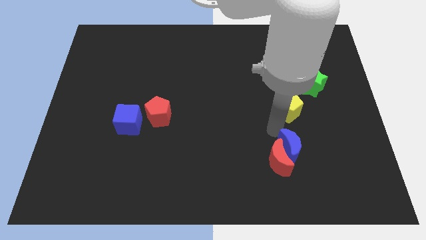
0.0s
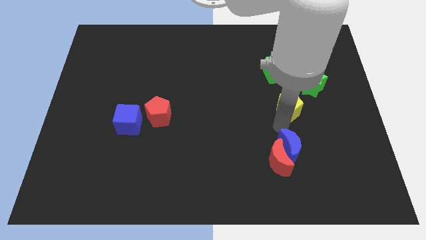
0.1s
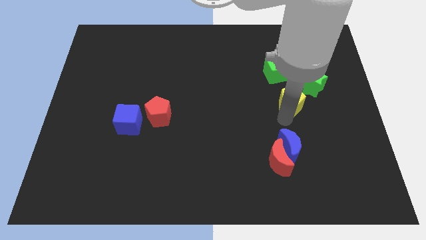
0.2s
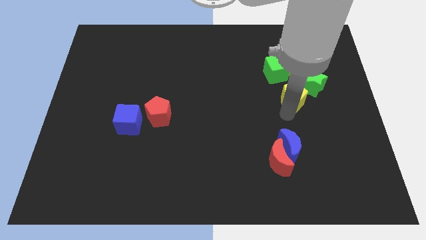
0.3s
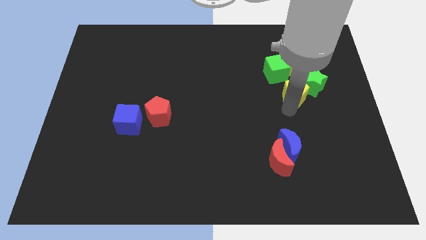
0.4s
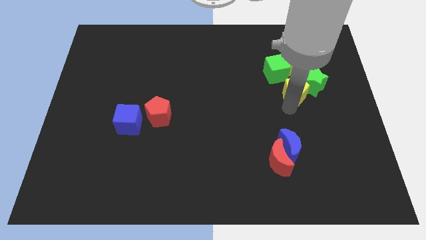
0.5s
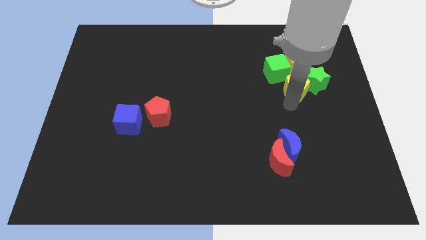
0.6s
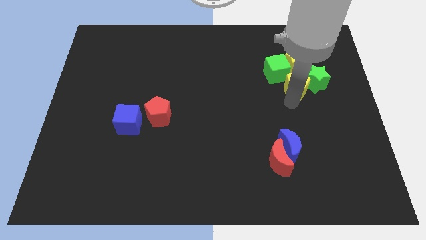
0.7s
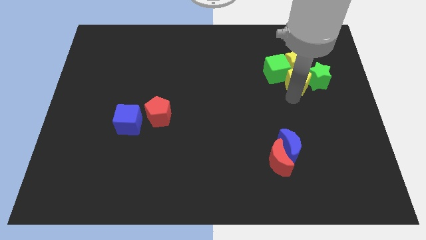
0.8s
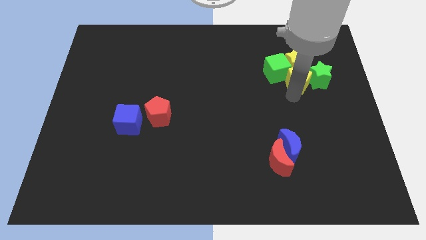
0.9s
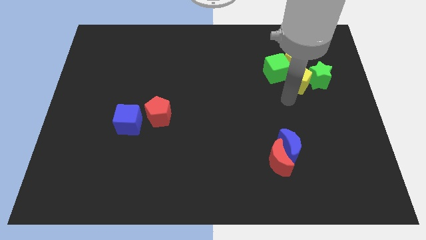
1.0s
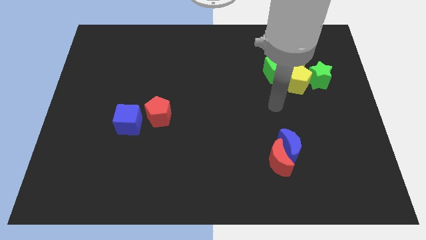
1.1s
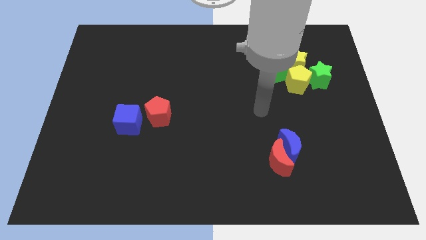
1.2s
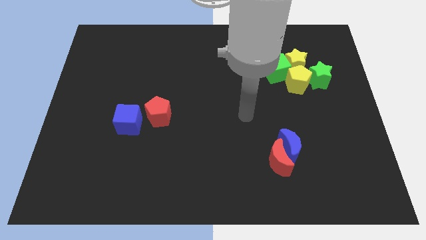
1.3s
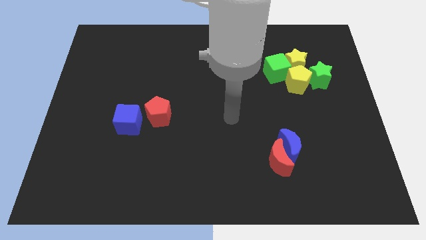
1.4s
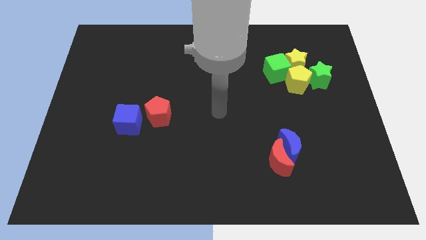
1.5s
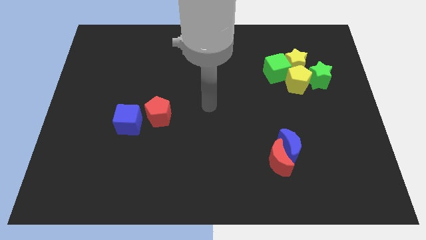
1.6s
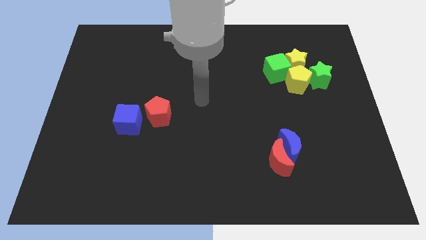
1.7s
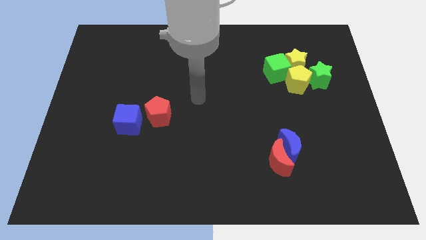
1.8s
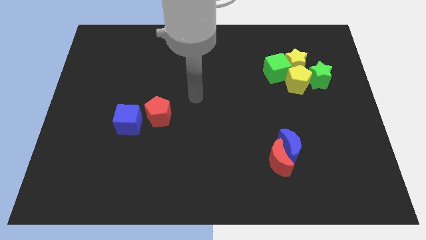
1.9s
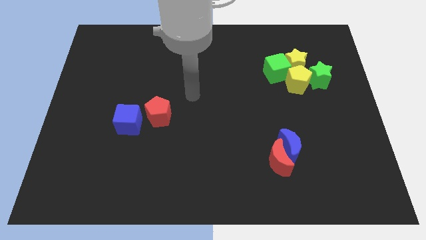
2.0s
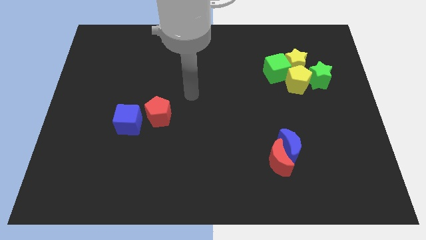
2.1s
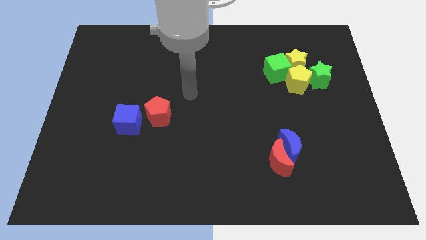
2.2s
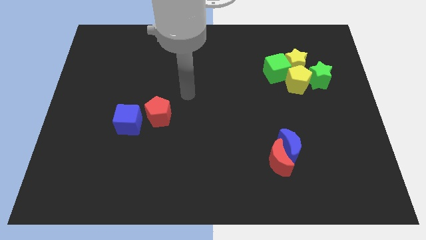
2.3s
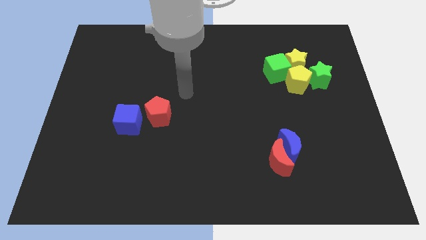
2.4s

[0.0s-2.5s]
move the yellow pentagon below into the yellow star

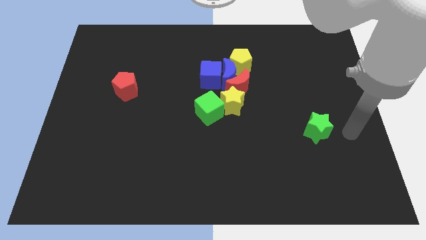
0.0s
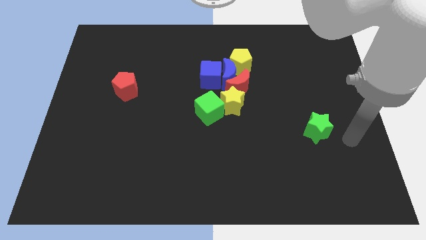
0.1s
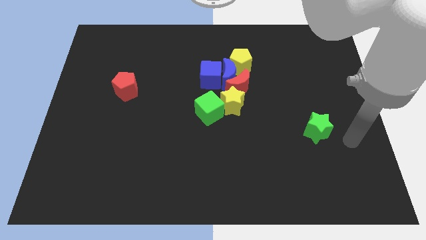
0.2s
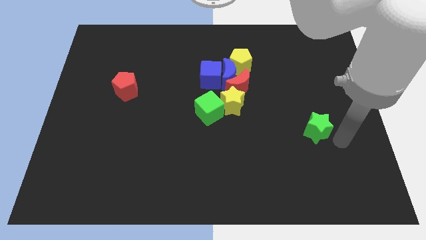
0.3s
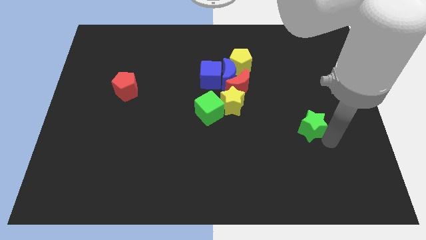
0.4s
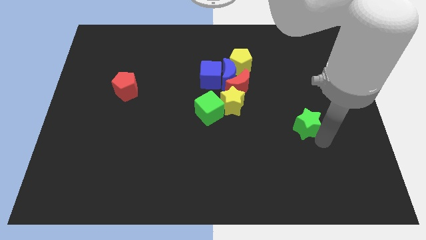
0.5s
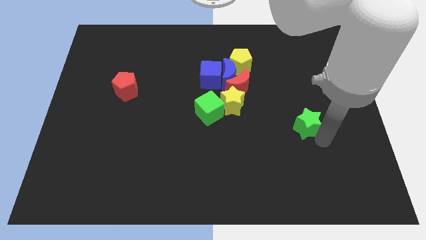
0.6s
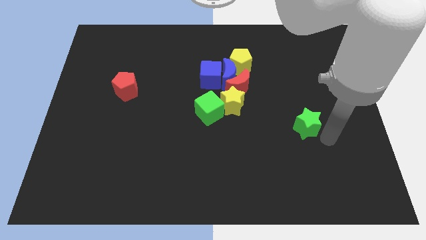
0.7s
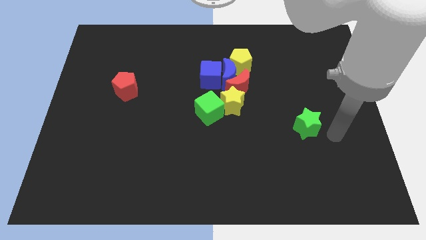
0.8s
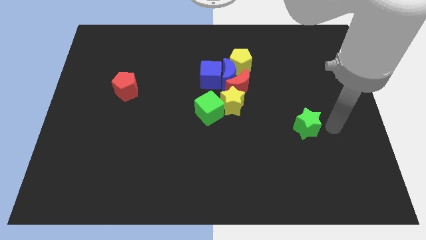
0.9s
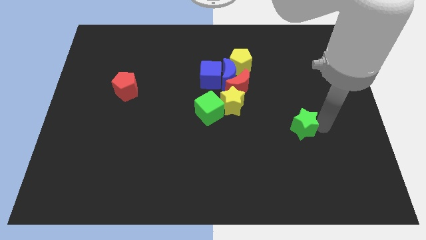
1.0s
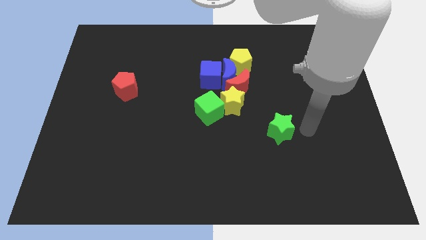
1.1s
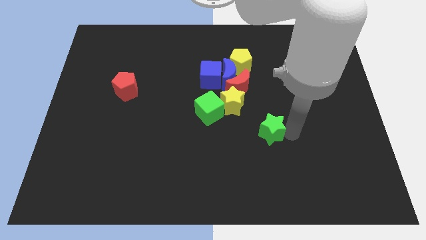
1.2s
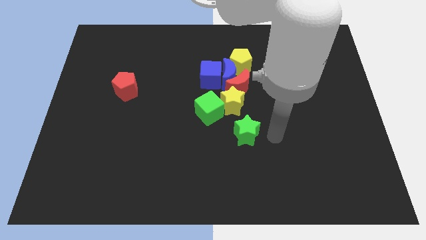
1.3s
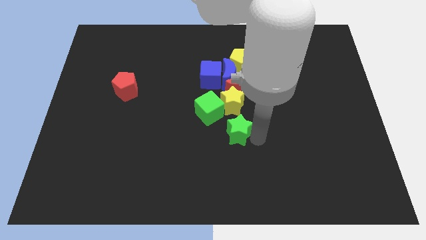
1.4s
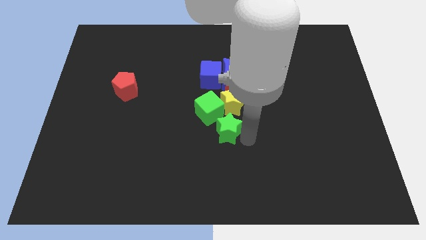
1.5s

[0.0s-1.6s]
place green star below yellow star

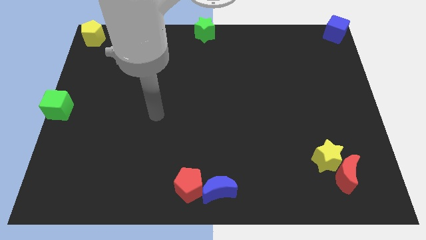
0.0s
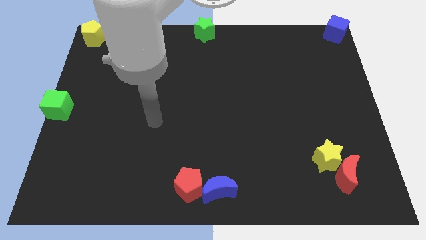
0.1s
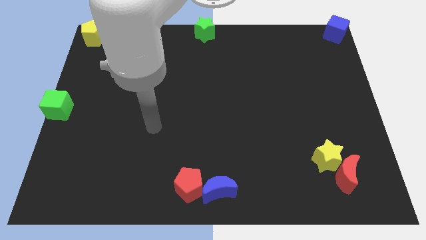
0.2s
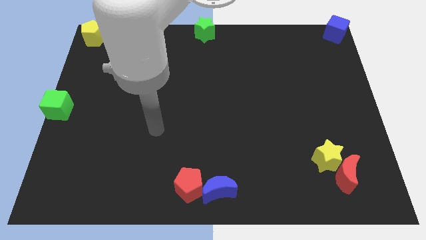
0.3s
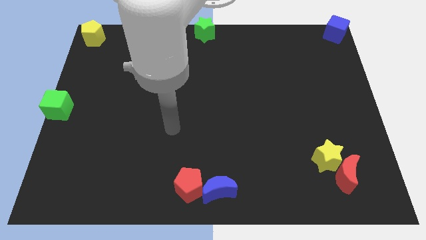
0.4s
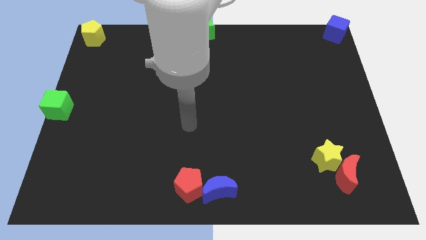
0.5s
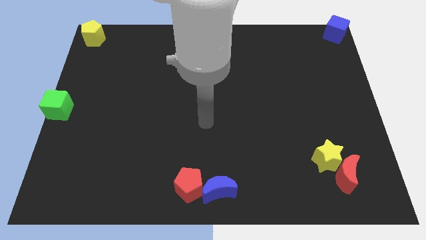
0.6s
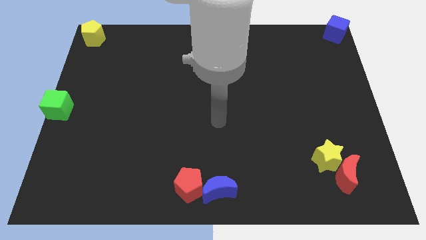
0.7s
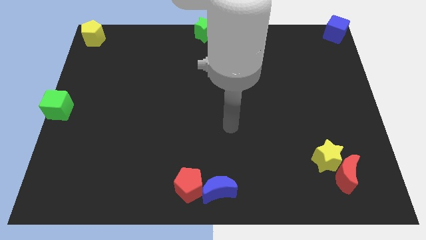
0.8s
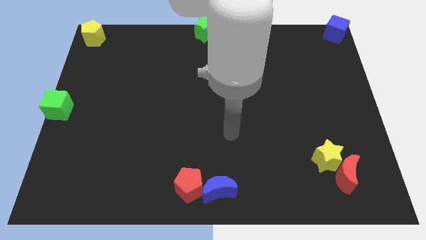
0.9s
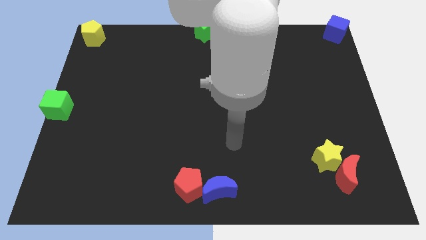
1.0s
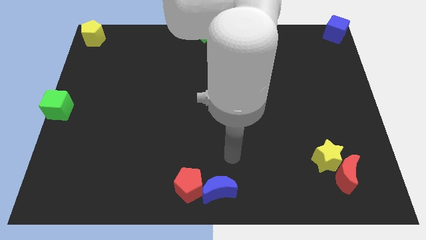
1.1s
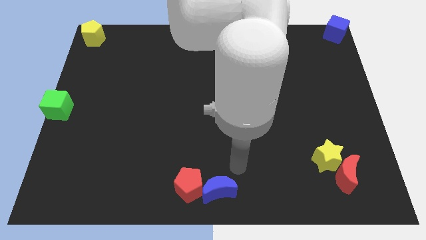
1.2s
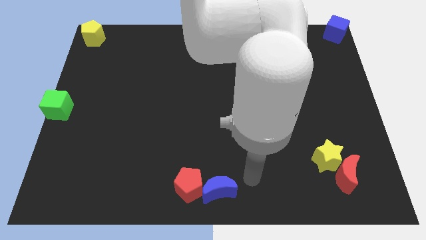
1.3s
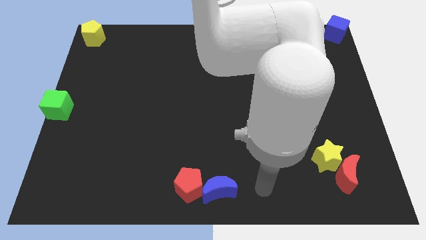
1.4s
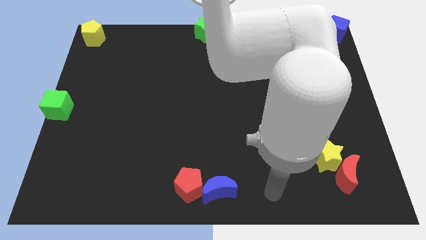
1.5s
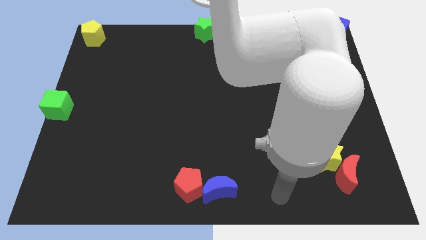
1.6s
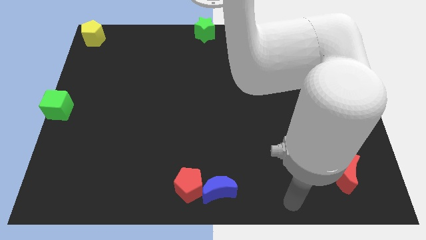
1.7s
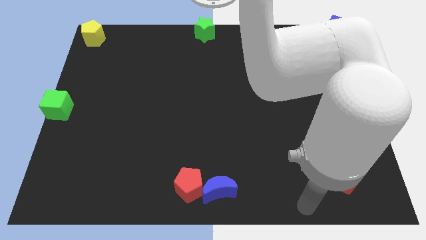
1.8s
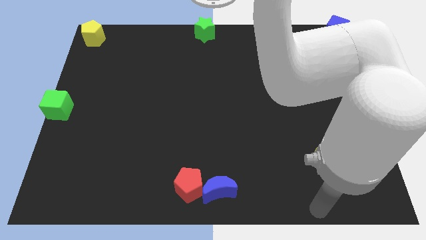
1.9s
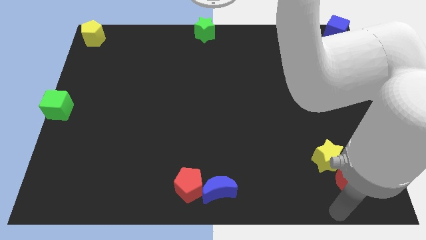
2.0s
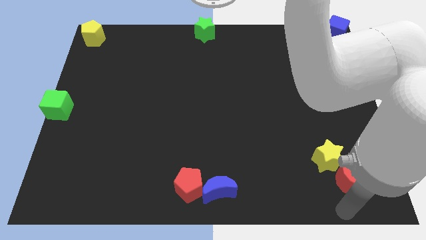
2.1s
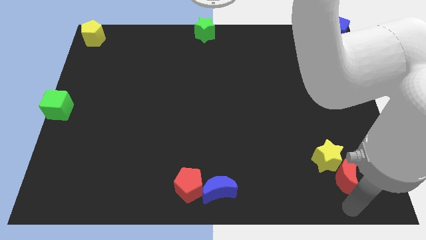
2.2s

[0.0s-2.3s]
move your arm towards the bottom right side of the board

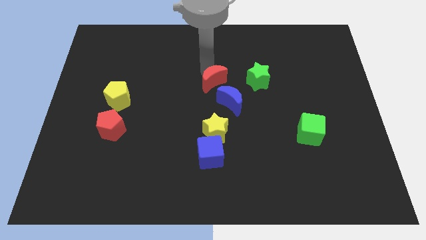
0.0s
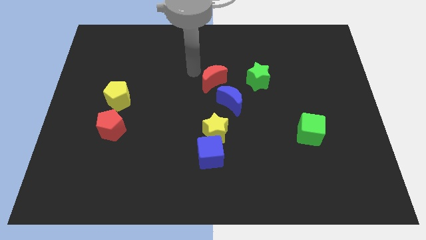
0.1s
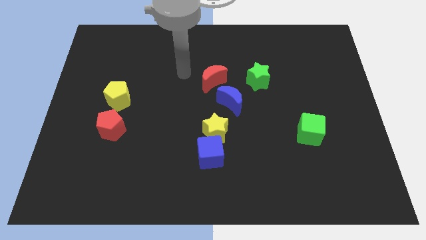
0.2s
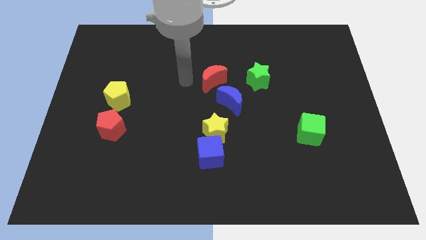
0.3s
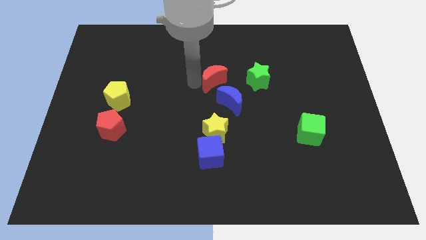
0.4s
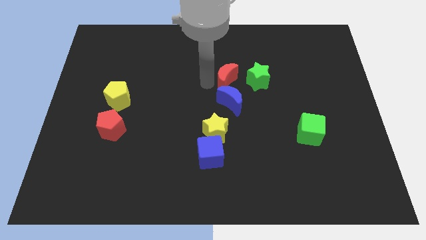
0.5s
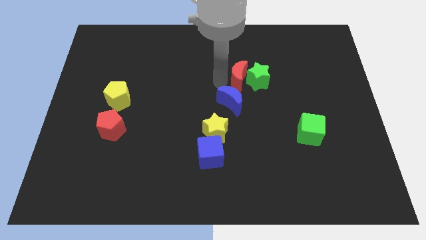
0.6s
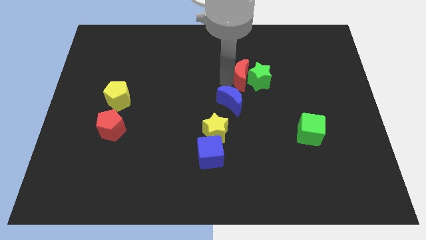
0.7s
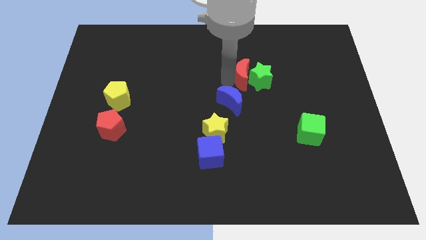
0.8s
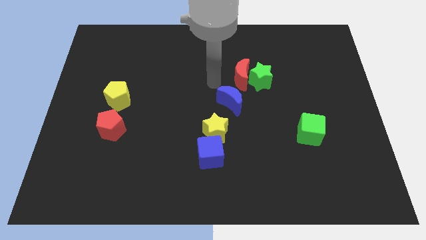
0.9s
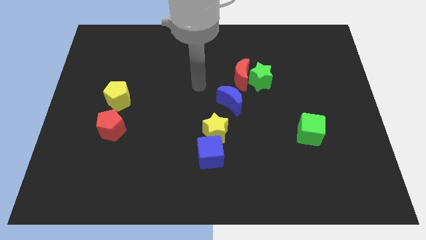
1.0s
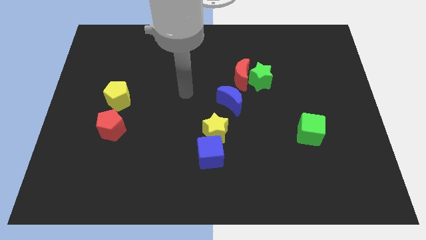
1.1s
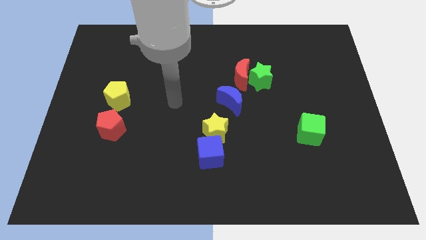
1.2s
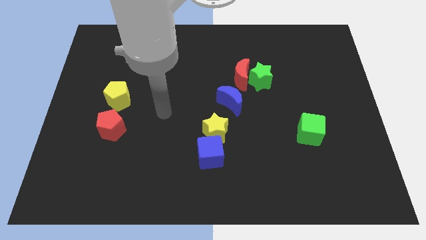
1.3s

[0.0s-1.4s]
put the red moon into the green star

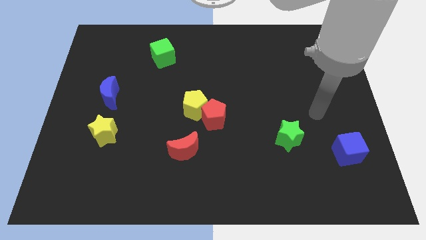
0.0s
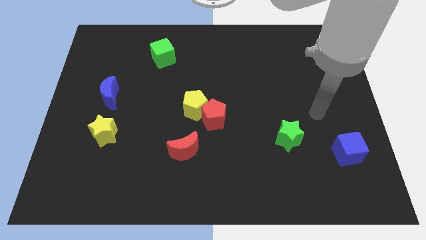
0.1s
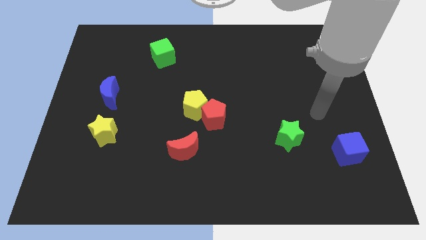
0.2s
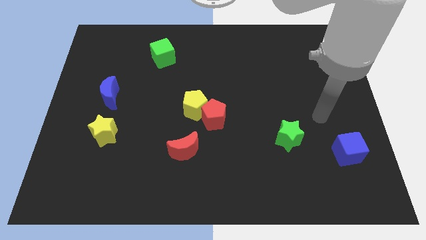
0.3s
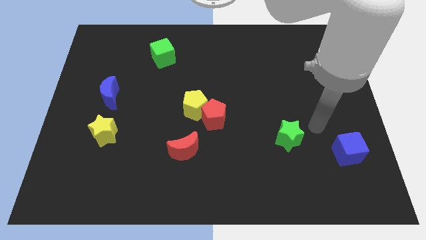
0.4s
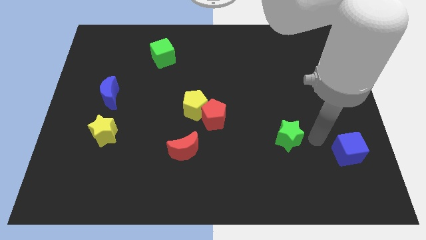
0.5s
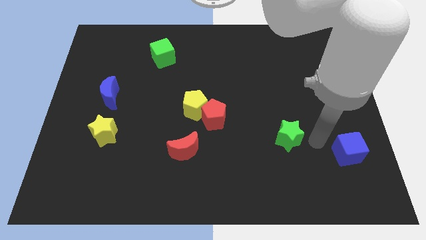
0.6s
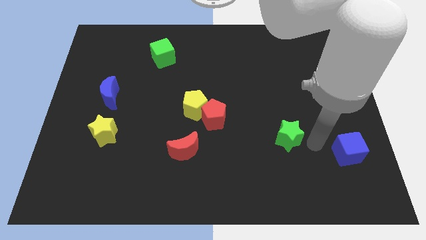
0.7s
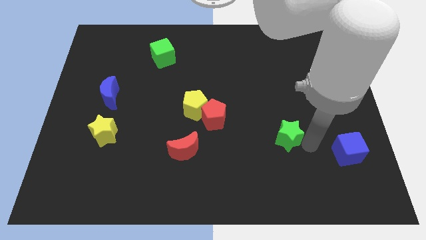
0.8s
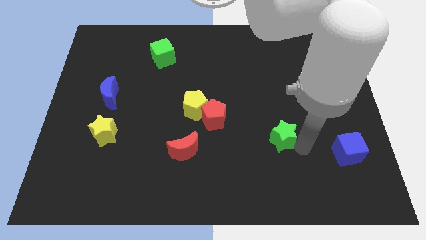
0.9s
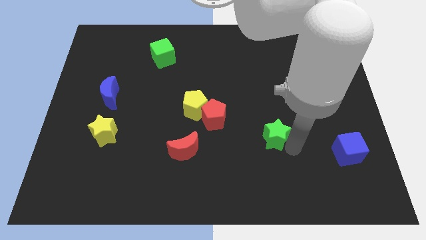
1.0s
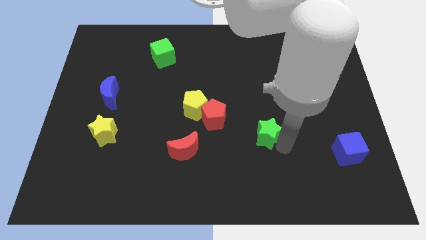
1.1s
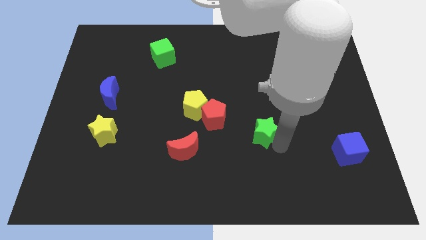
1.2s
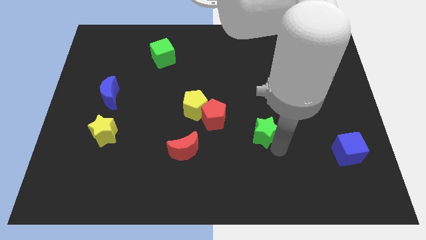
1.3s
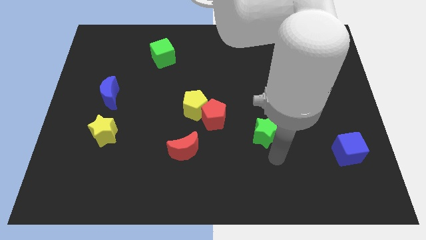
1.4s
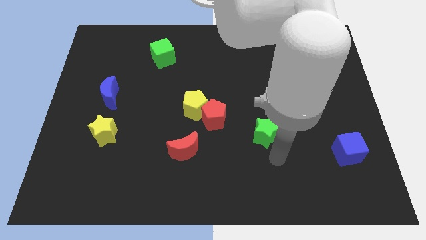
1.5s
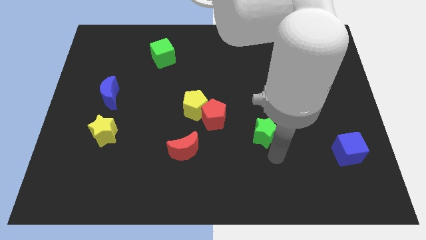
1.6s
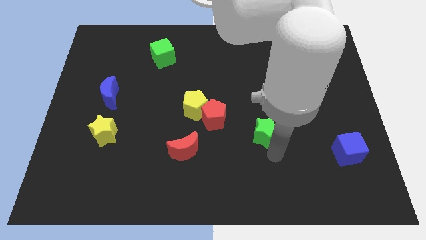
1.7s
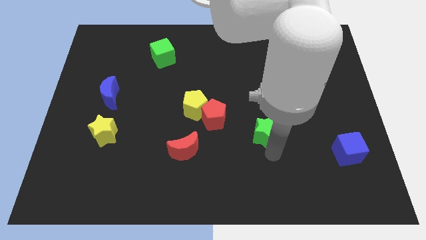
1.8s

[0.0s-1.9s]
push the green star towards the red pentagon
